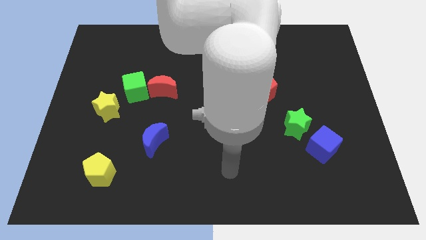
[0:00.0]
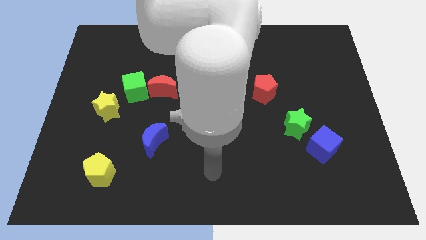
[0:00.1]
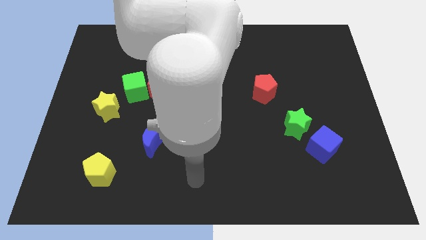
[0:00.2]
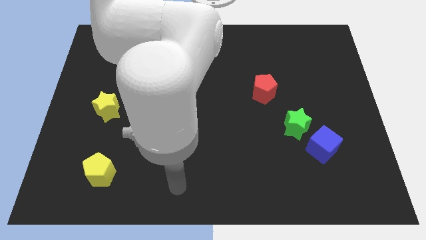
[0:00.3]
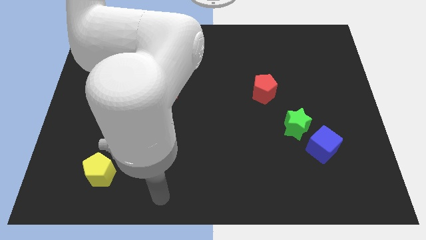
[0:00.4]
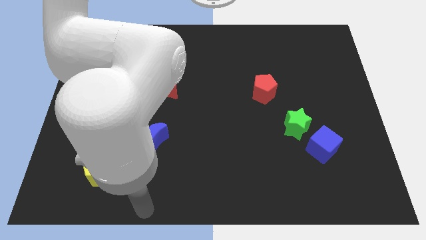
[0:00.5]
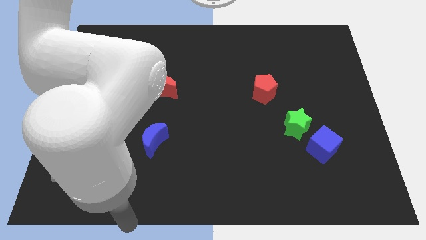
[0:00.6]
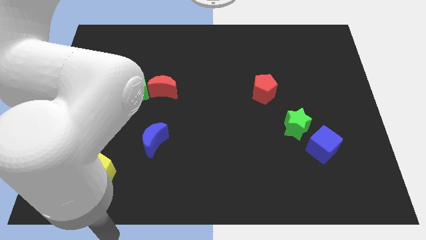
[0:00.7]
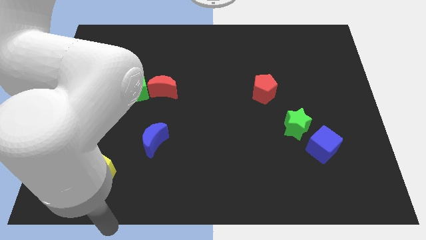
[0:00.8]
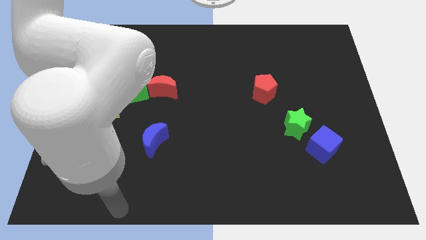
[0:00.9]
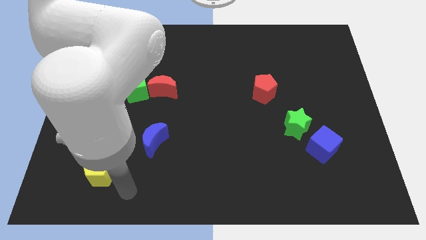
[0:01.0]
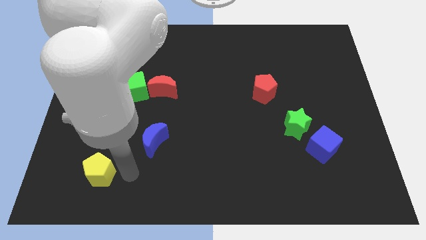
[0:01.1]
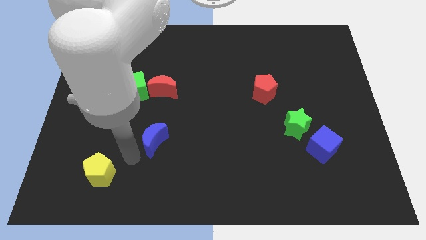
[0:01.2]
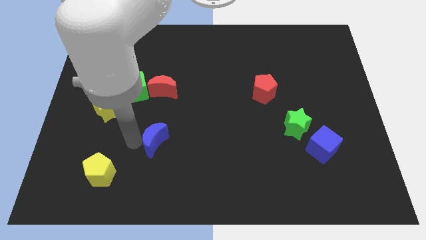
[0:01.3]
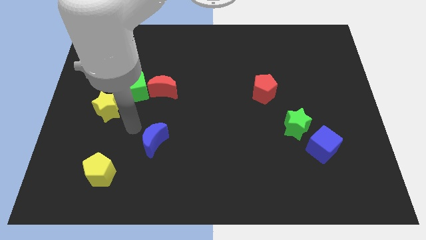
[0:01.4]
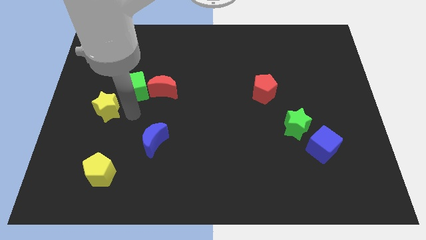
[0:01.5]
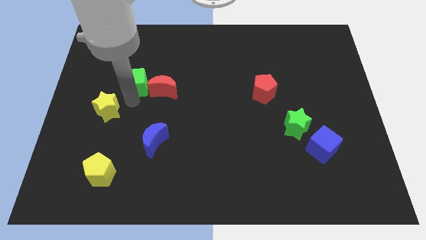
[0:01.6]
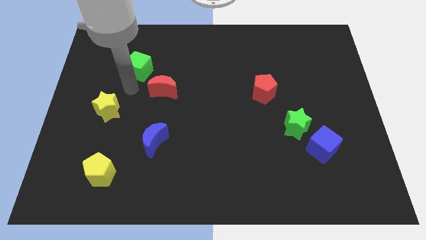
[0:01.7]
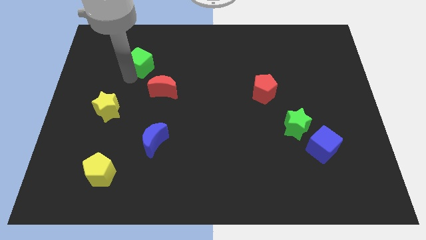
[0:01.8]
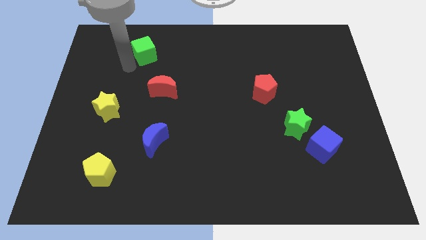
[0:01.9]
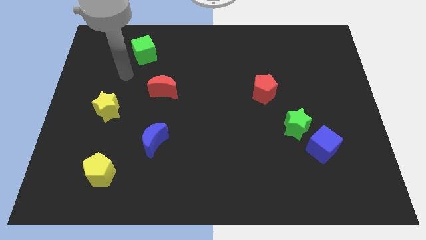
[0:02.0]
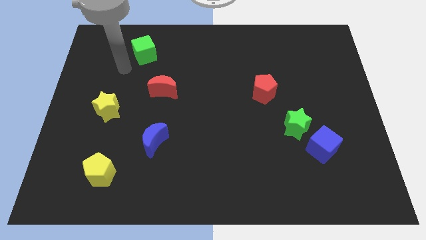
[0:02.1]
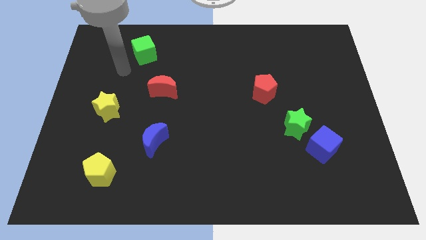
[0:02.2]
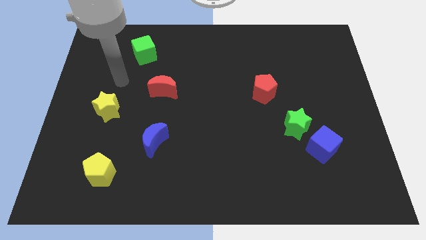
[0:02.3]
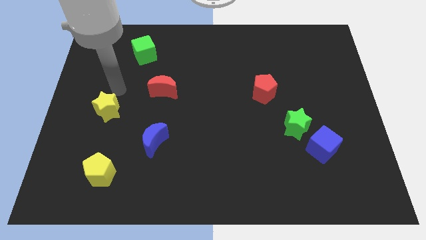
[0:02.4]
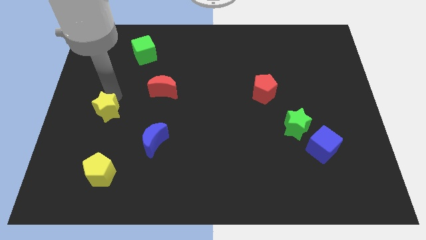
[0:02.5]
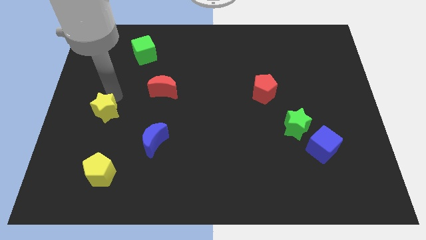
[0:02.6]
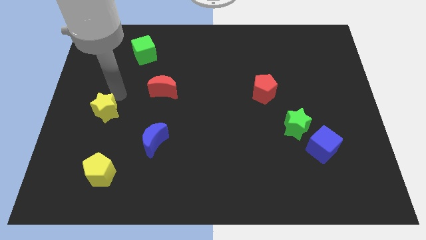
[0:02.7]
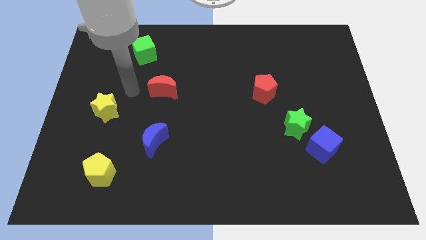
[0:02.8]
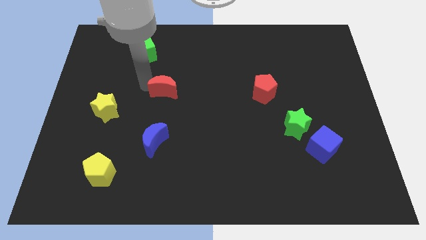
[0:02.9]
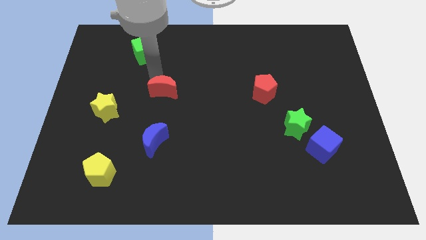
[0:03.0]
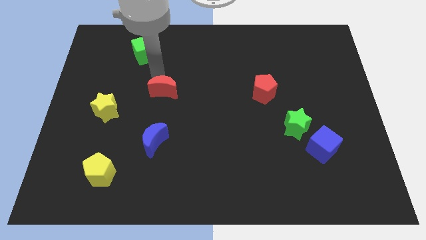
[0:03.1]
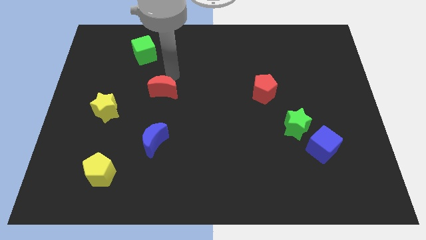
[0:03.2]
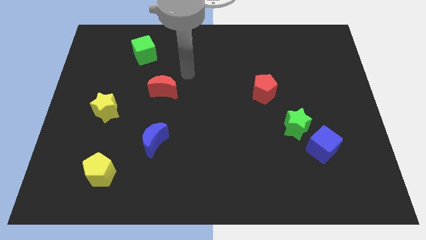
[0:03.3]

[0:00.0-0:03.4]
move the green cube away from the left side of the red crescent

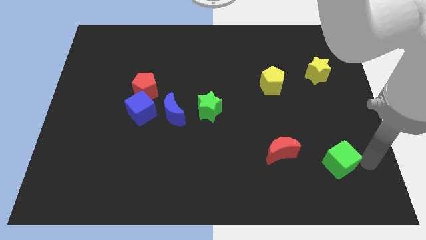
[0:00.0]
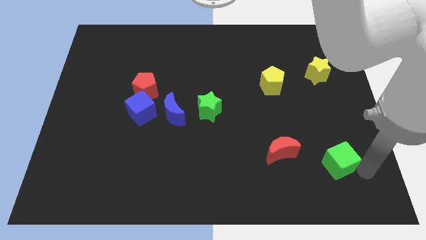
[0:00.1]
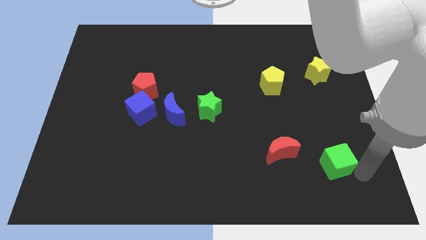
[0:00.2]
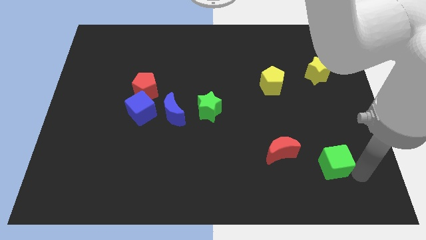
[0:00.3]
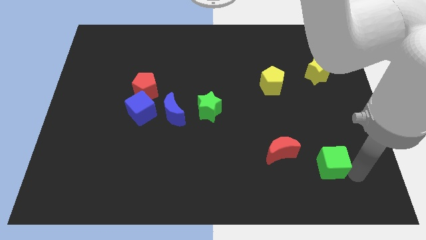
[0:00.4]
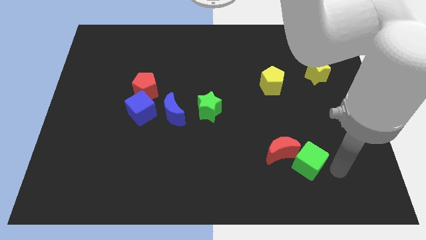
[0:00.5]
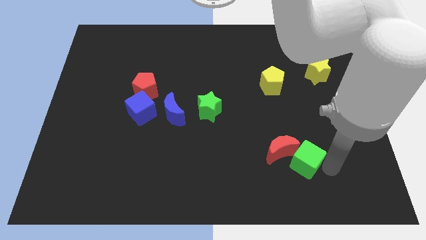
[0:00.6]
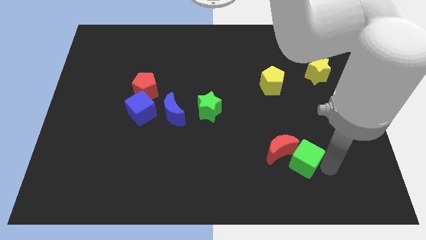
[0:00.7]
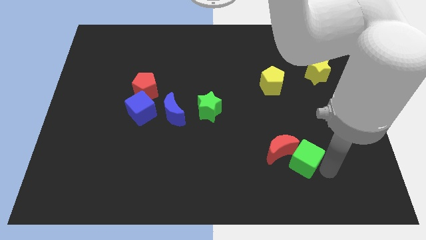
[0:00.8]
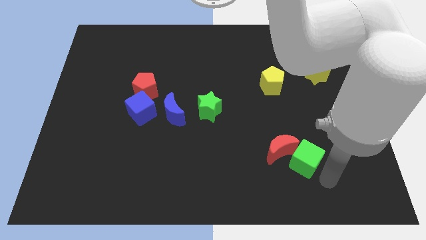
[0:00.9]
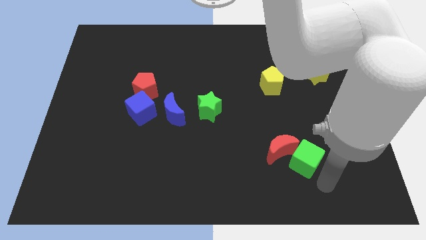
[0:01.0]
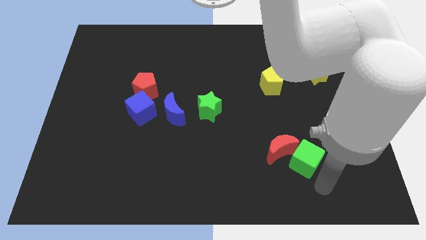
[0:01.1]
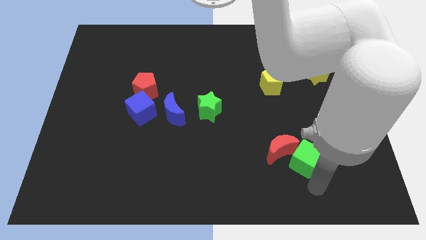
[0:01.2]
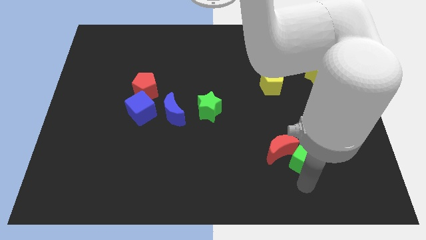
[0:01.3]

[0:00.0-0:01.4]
push green cube into the red moon

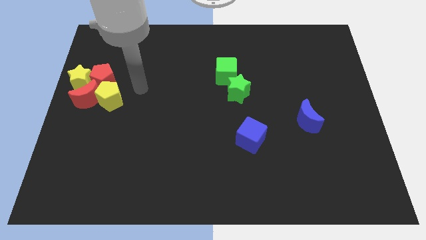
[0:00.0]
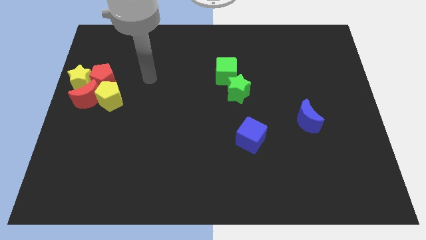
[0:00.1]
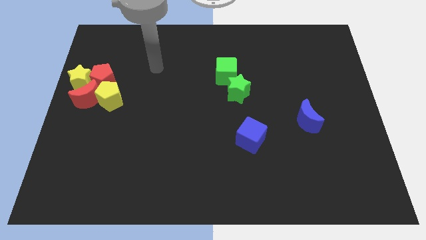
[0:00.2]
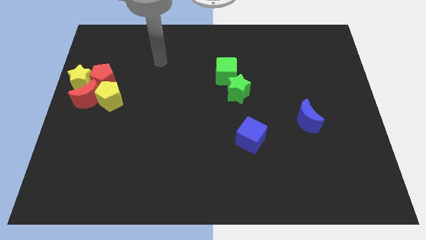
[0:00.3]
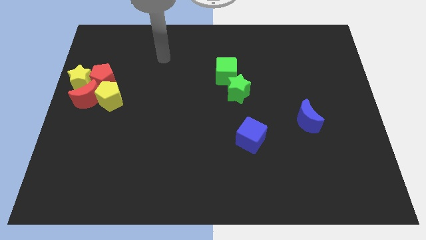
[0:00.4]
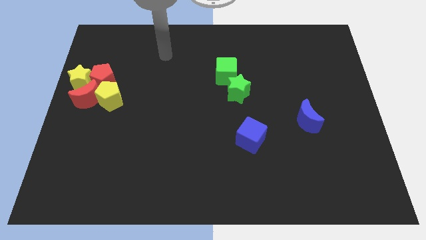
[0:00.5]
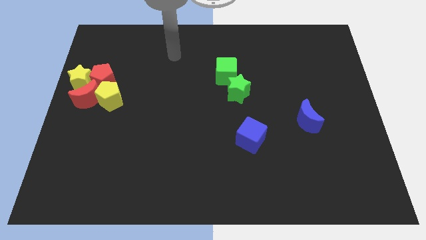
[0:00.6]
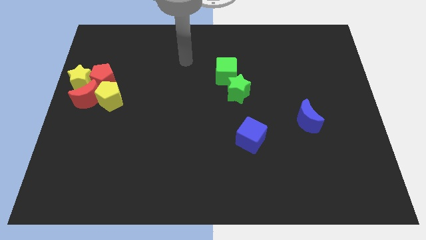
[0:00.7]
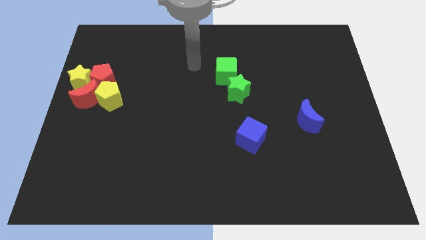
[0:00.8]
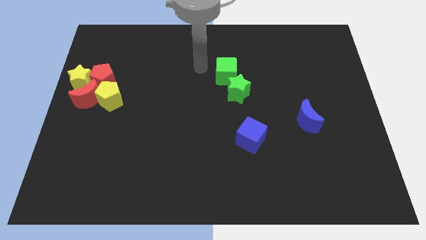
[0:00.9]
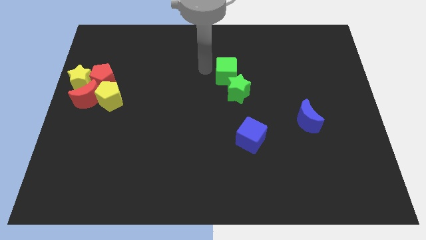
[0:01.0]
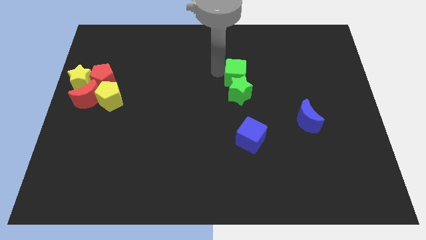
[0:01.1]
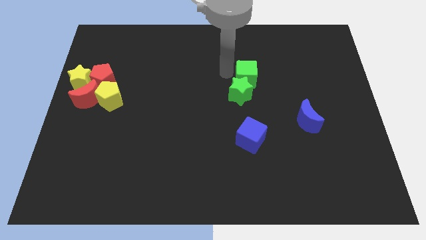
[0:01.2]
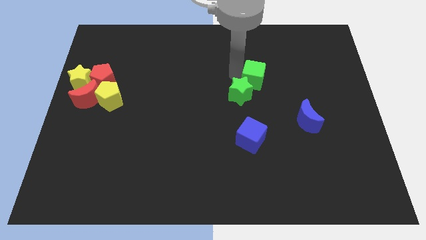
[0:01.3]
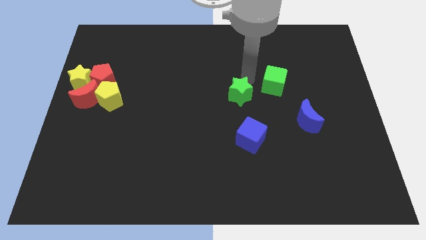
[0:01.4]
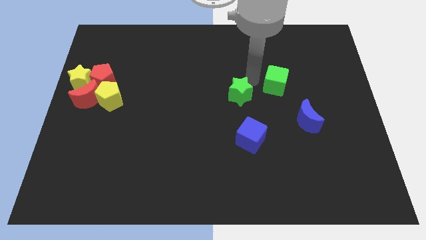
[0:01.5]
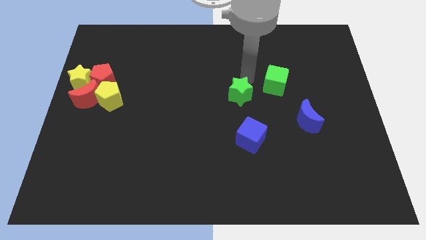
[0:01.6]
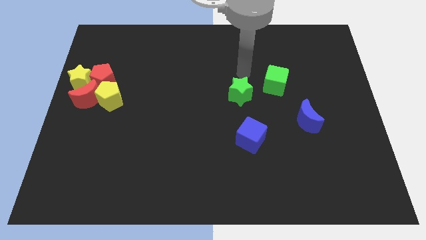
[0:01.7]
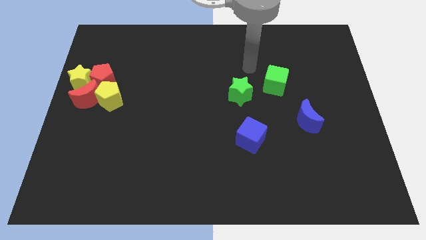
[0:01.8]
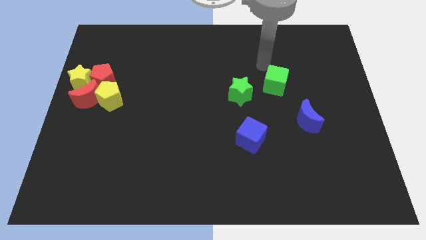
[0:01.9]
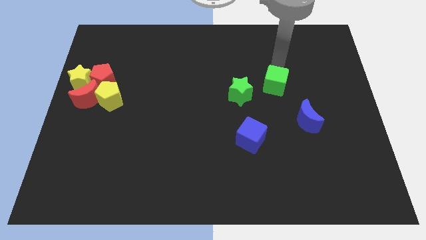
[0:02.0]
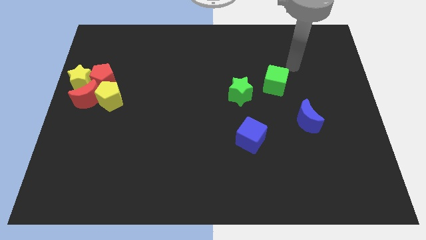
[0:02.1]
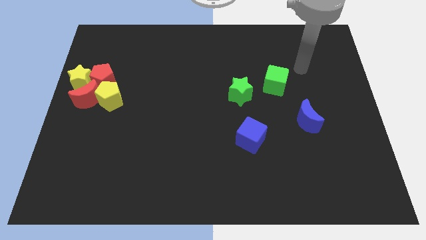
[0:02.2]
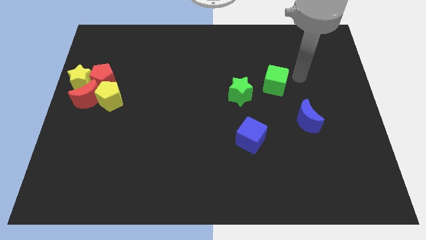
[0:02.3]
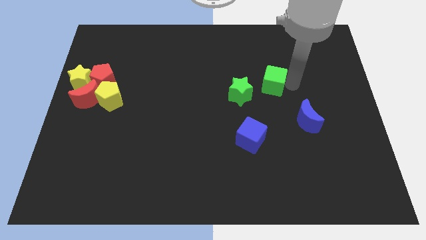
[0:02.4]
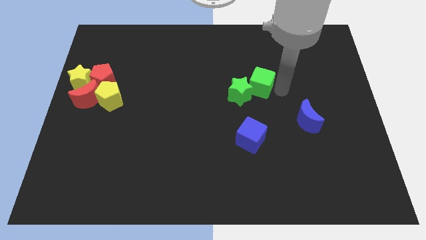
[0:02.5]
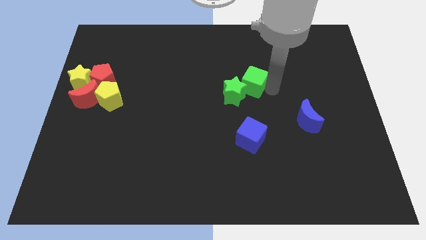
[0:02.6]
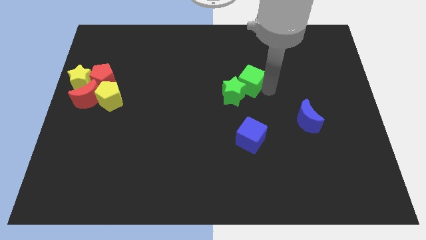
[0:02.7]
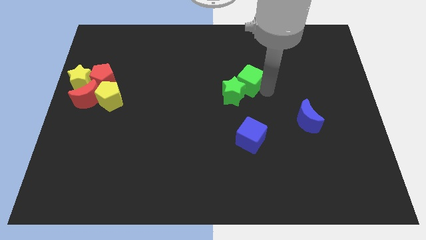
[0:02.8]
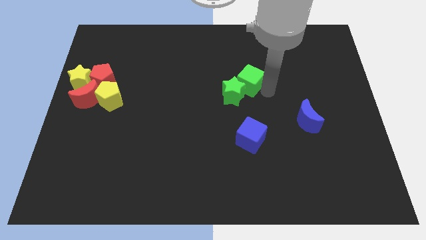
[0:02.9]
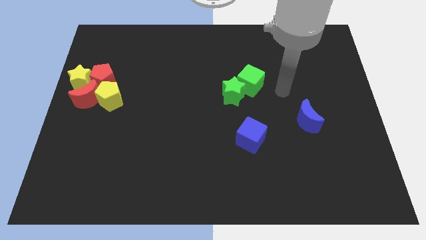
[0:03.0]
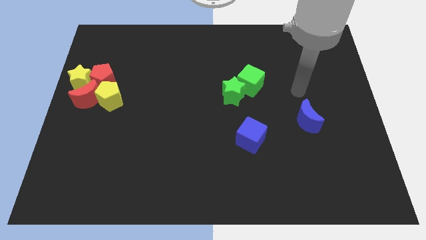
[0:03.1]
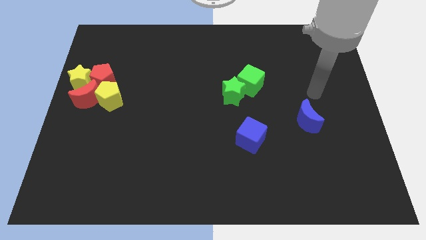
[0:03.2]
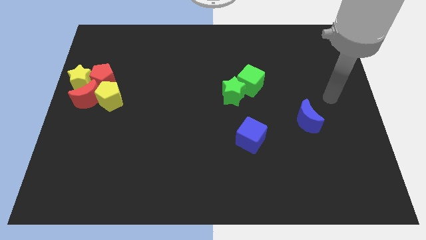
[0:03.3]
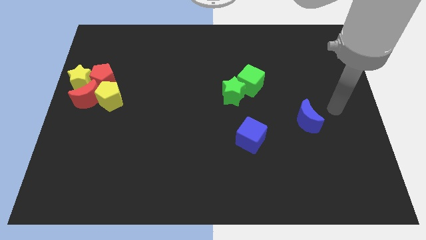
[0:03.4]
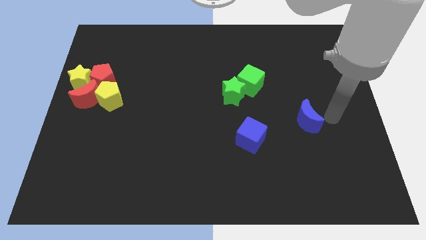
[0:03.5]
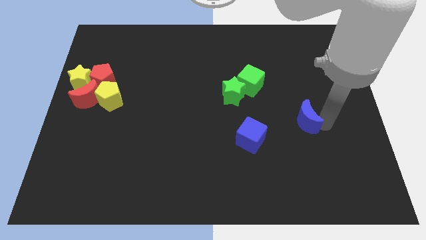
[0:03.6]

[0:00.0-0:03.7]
slide the green cube vertically on top of the blue cube

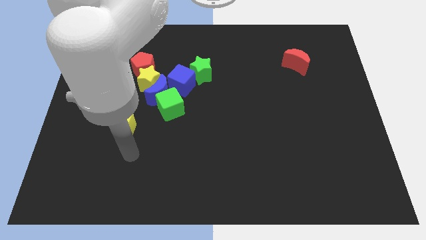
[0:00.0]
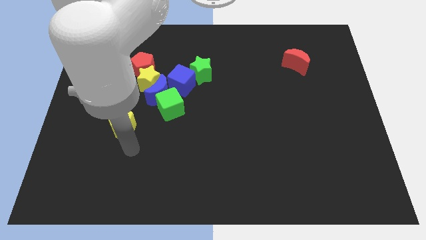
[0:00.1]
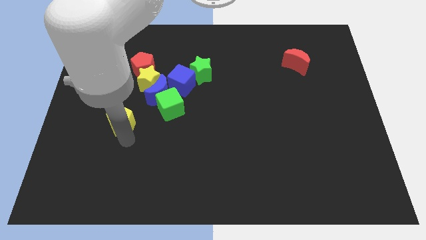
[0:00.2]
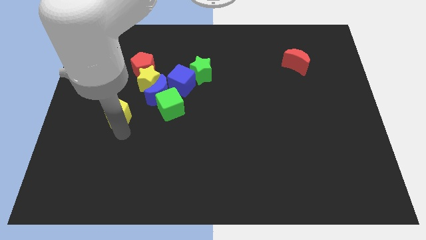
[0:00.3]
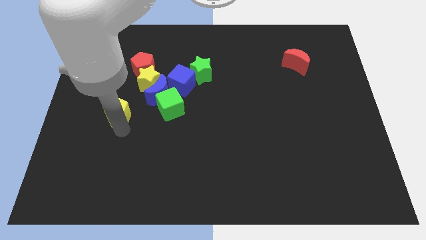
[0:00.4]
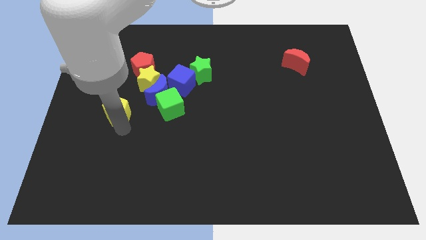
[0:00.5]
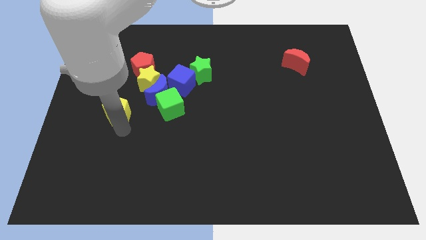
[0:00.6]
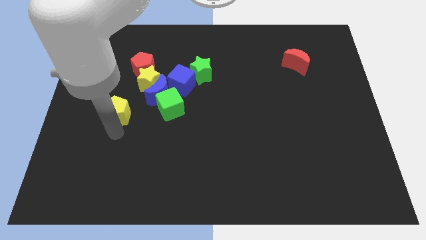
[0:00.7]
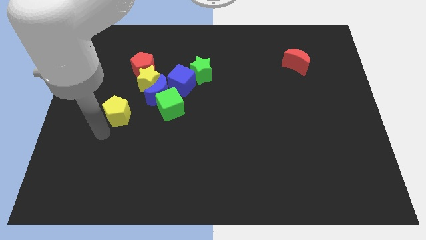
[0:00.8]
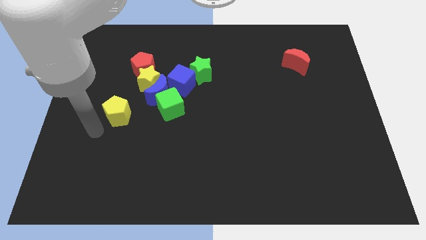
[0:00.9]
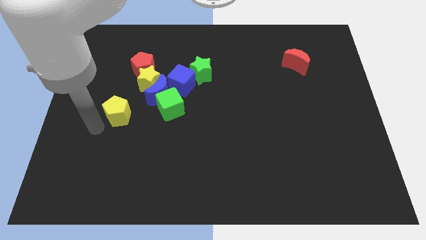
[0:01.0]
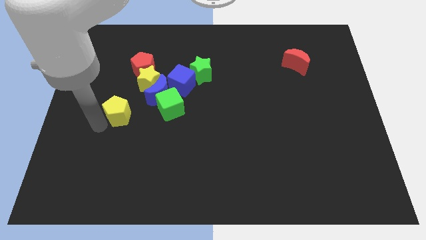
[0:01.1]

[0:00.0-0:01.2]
place the yellow pentagon to the left of the green cube
